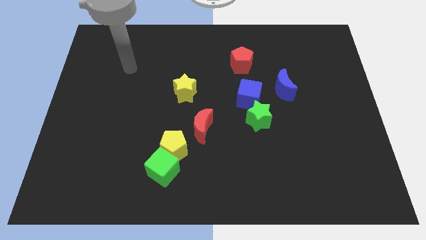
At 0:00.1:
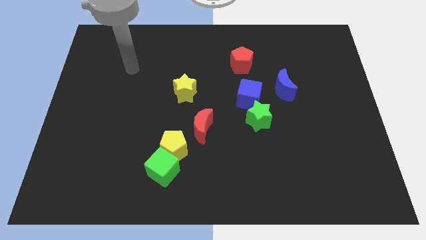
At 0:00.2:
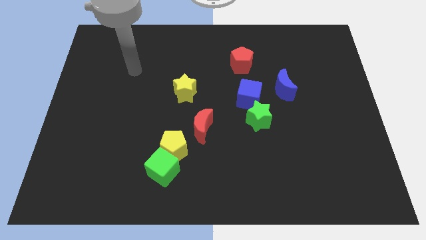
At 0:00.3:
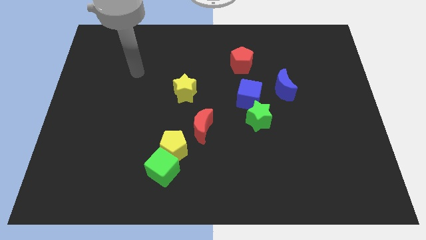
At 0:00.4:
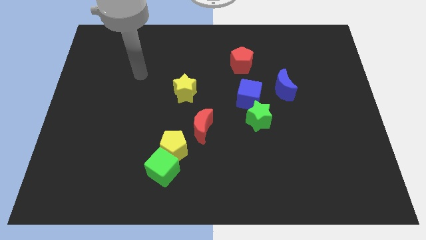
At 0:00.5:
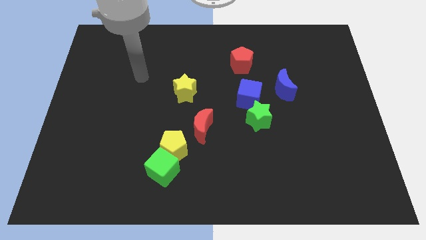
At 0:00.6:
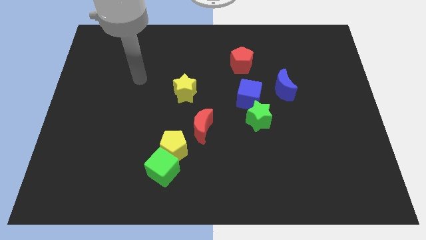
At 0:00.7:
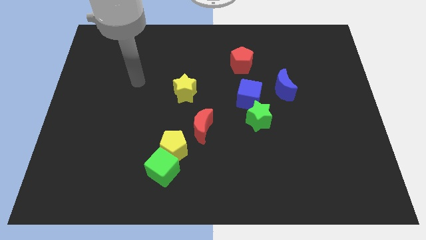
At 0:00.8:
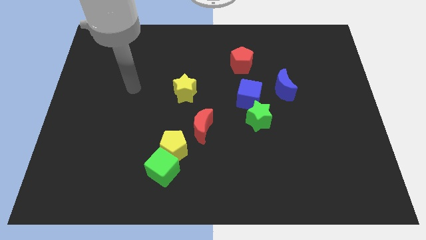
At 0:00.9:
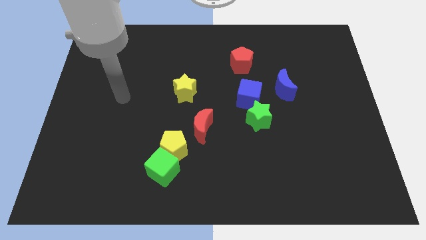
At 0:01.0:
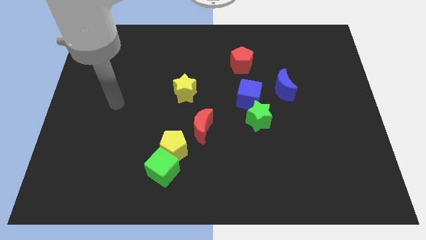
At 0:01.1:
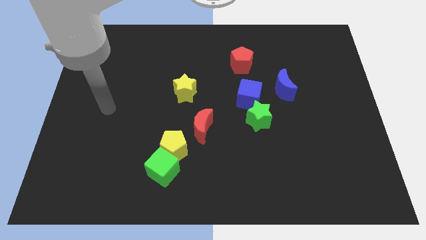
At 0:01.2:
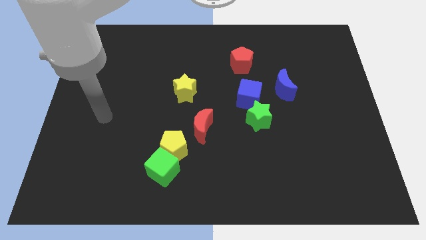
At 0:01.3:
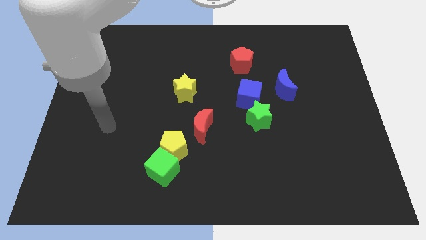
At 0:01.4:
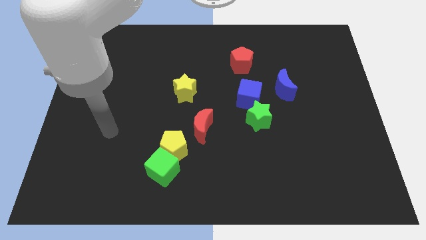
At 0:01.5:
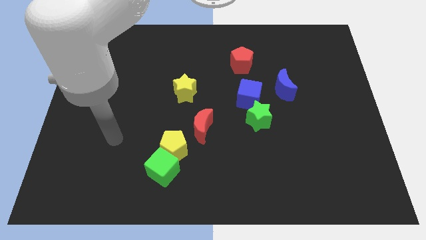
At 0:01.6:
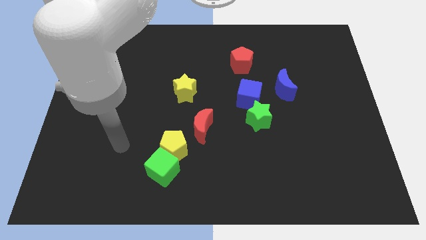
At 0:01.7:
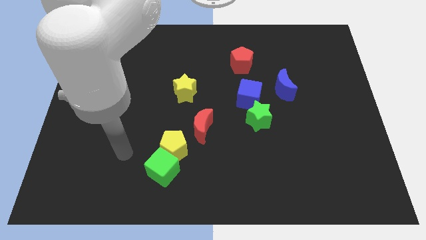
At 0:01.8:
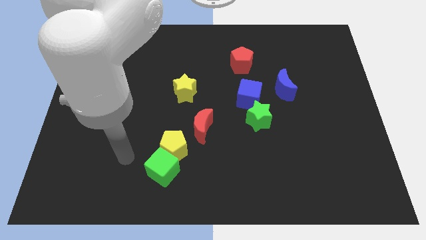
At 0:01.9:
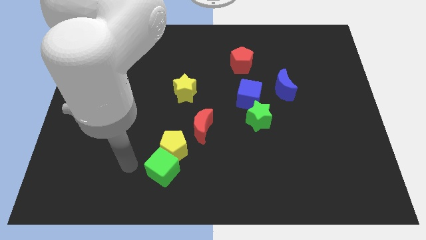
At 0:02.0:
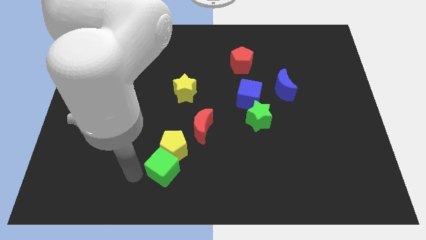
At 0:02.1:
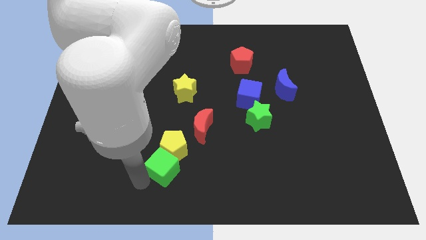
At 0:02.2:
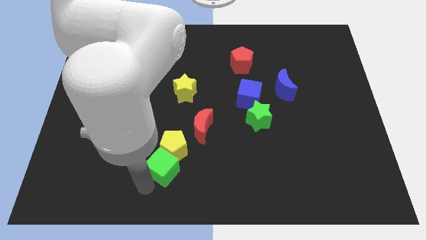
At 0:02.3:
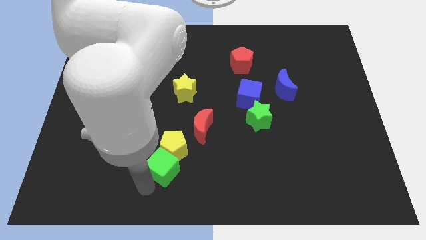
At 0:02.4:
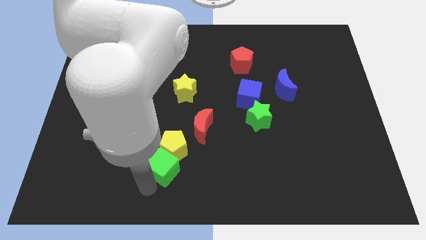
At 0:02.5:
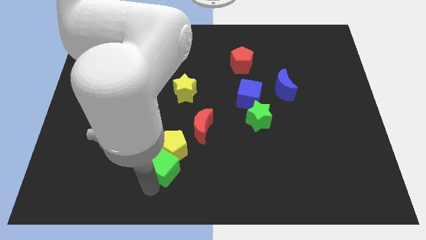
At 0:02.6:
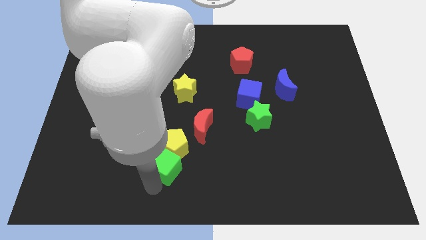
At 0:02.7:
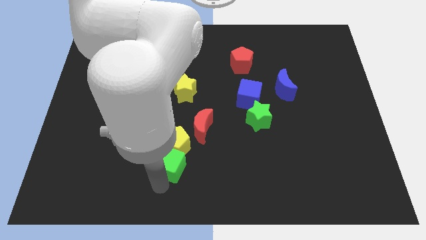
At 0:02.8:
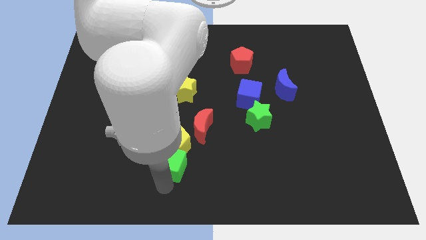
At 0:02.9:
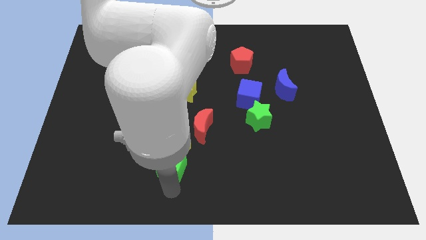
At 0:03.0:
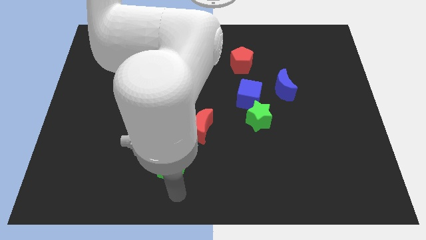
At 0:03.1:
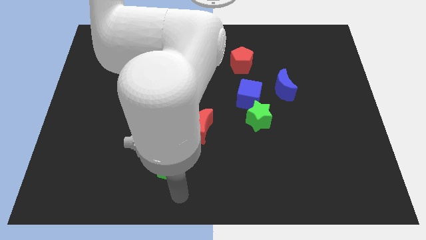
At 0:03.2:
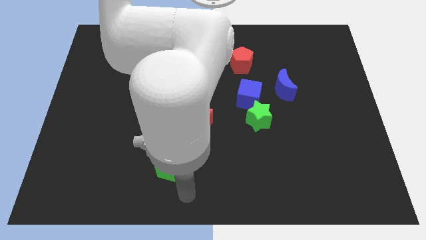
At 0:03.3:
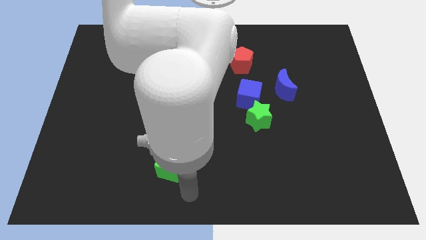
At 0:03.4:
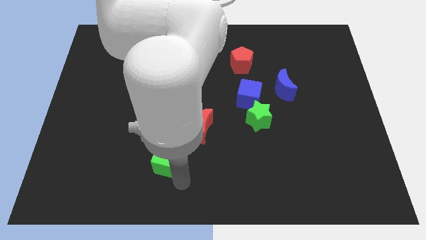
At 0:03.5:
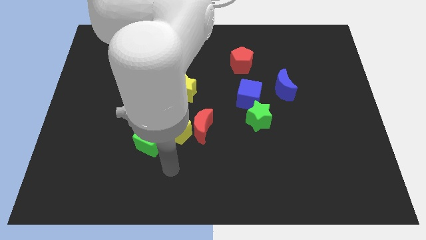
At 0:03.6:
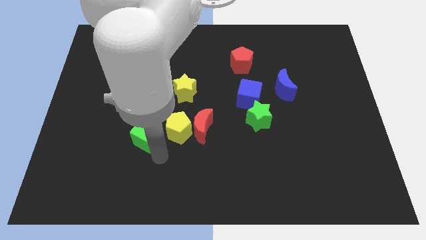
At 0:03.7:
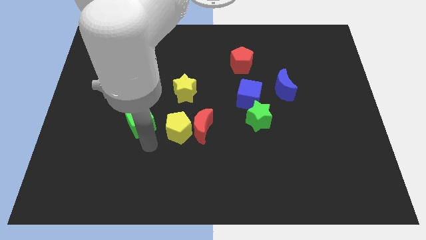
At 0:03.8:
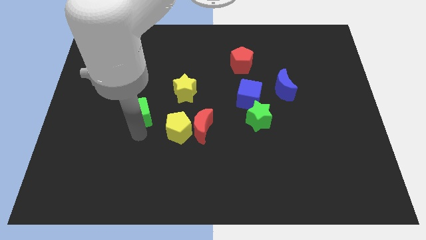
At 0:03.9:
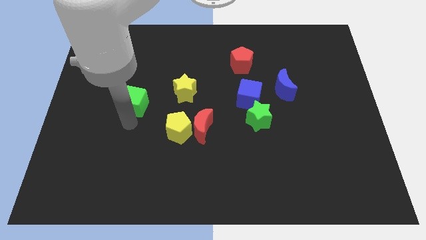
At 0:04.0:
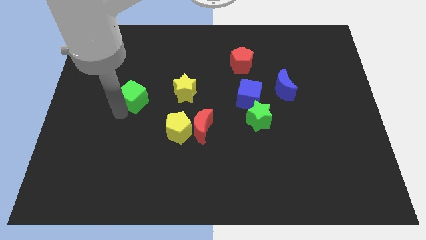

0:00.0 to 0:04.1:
separate green cube from the yellow pentagon

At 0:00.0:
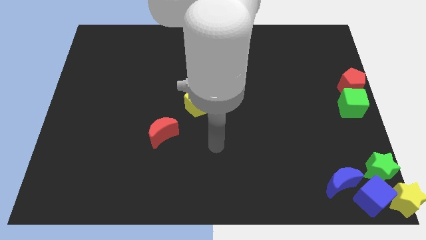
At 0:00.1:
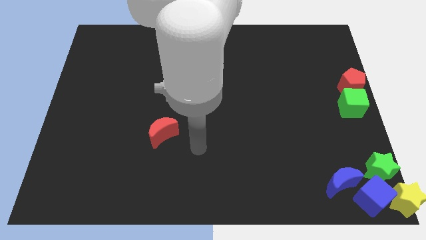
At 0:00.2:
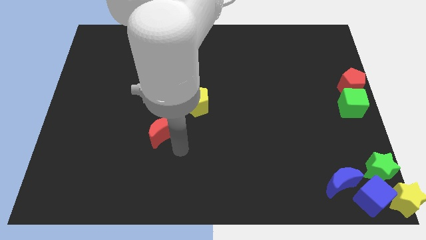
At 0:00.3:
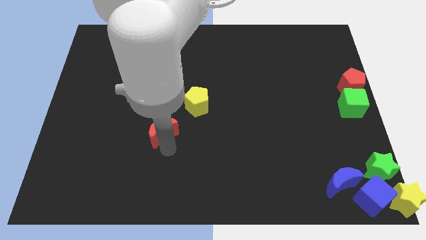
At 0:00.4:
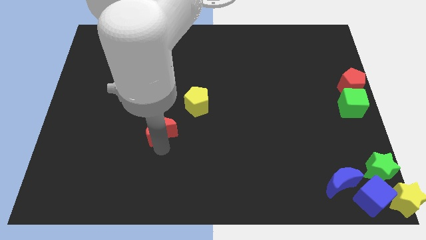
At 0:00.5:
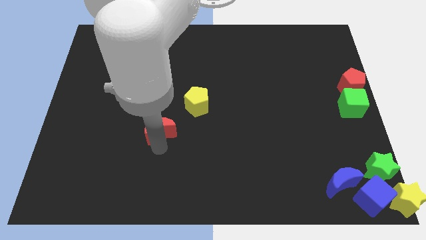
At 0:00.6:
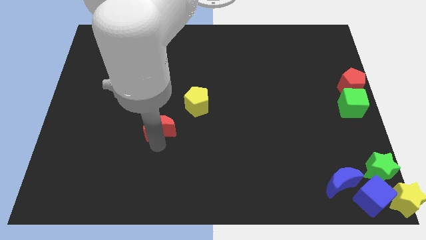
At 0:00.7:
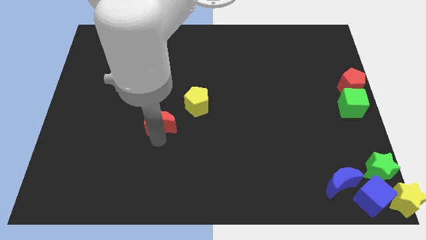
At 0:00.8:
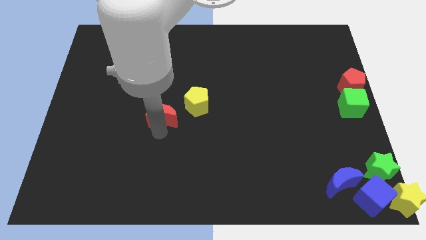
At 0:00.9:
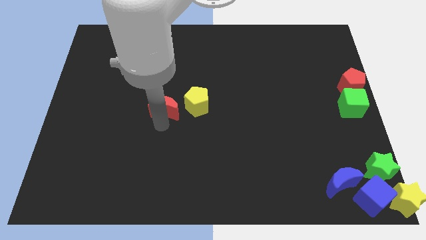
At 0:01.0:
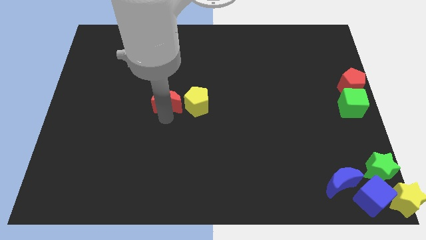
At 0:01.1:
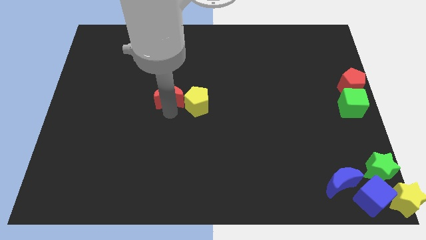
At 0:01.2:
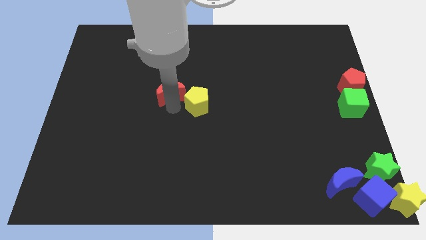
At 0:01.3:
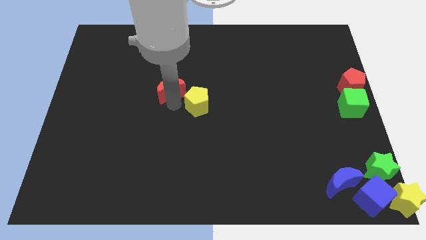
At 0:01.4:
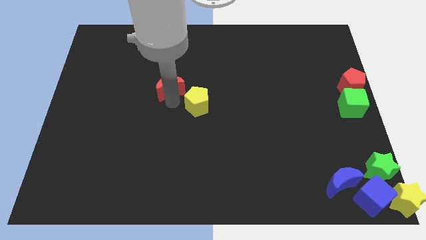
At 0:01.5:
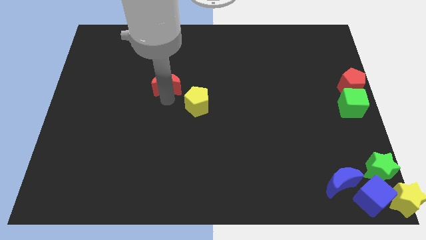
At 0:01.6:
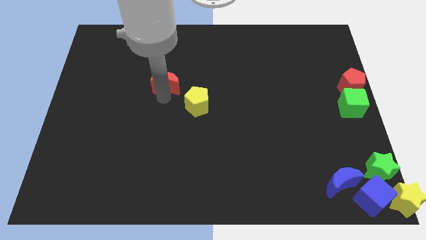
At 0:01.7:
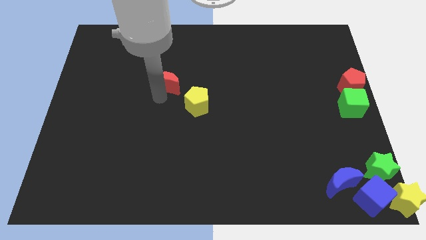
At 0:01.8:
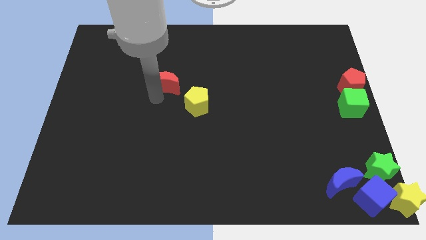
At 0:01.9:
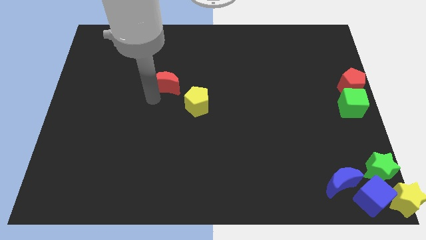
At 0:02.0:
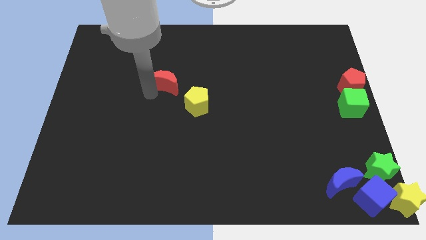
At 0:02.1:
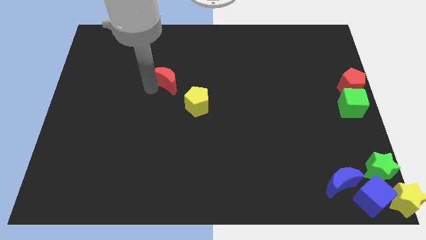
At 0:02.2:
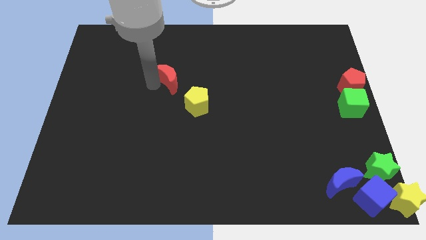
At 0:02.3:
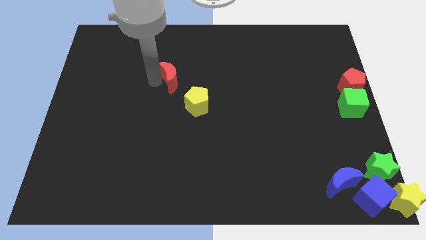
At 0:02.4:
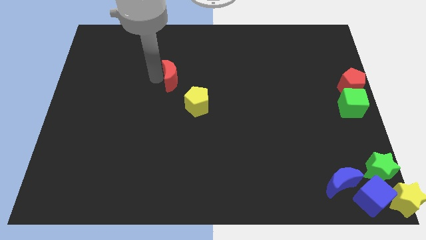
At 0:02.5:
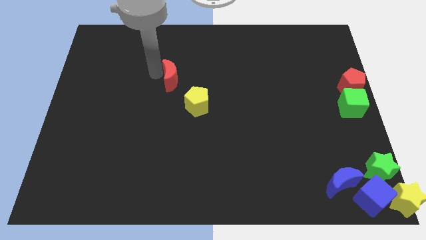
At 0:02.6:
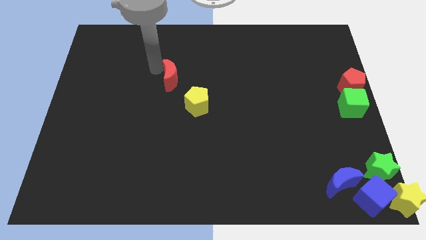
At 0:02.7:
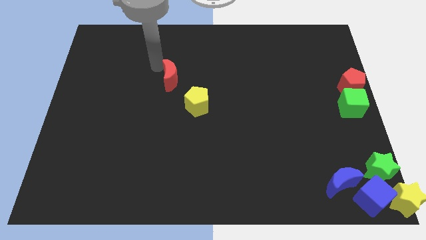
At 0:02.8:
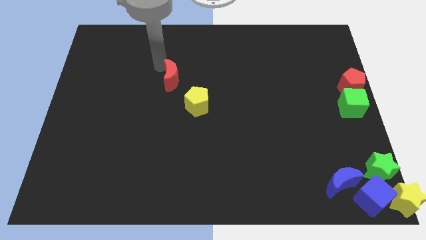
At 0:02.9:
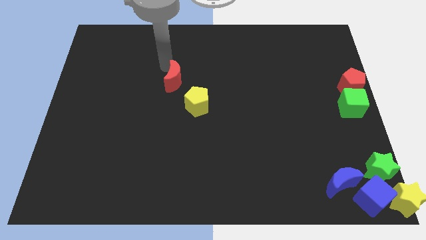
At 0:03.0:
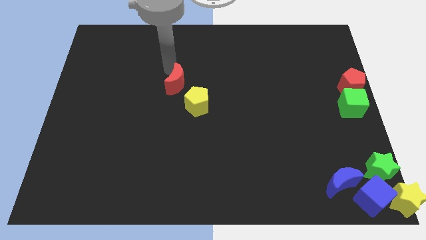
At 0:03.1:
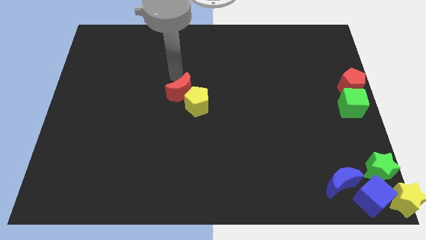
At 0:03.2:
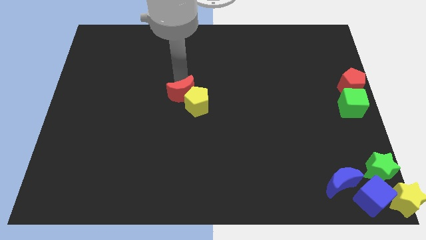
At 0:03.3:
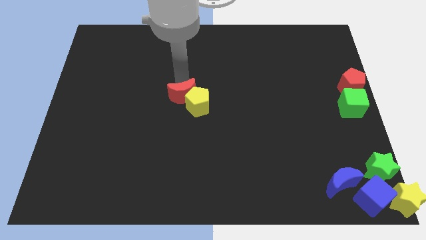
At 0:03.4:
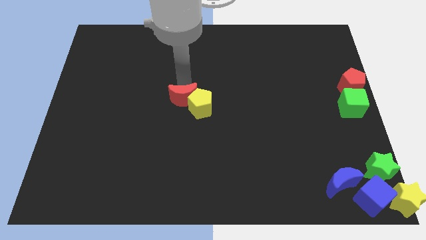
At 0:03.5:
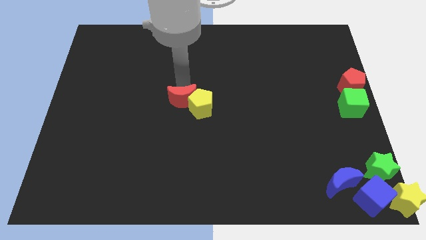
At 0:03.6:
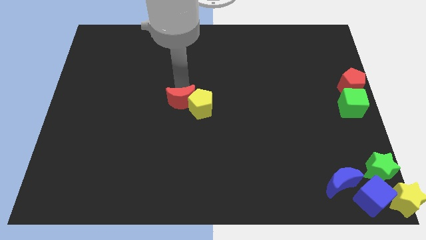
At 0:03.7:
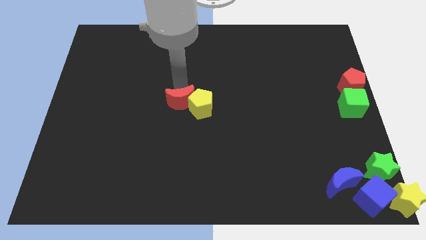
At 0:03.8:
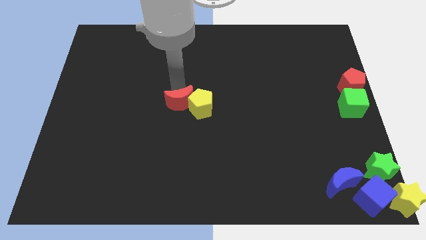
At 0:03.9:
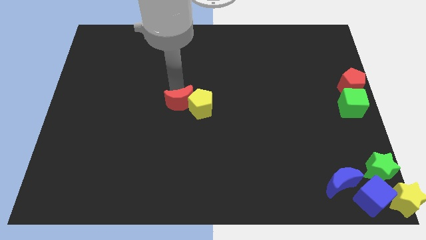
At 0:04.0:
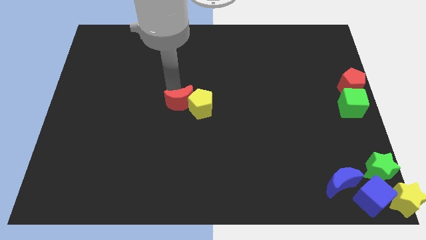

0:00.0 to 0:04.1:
push red crescent into the yellow pentagon

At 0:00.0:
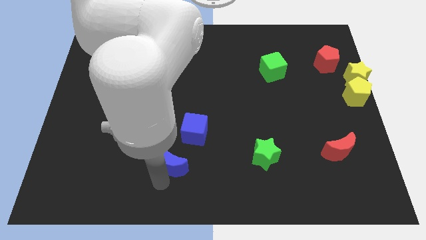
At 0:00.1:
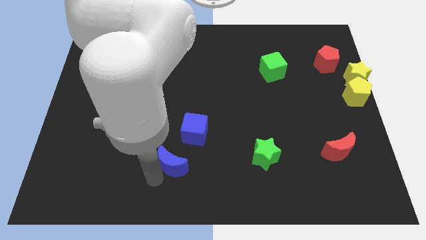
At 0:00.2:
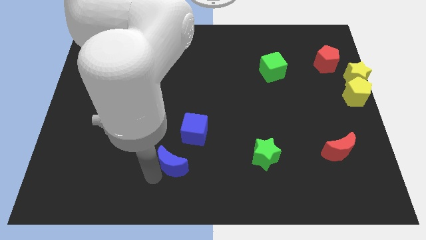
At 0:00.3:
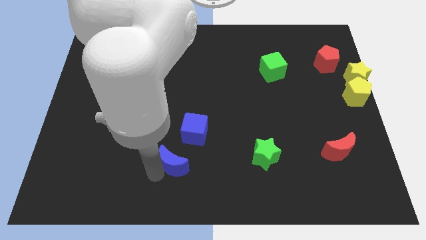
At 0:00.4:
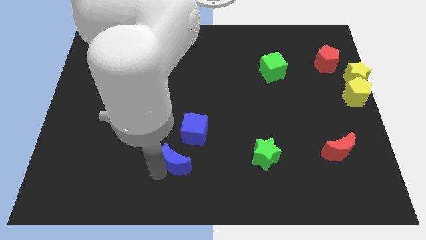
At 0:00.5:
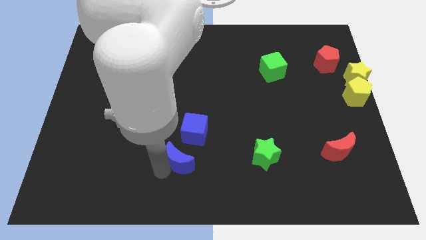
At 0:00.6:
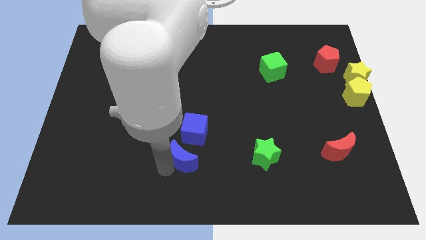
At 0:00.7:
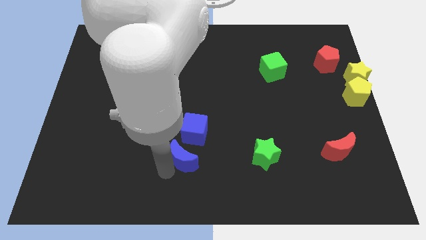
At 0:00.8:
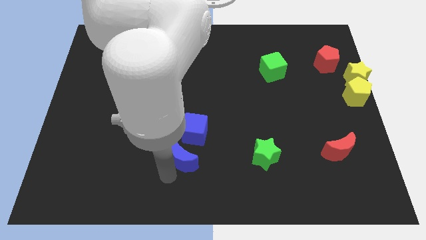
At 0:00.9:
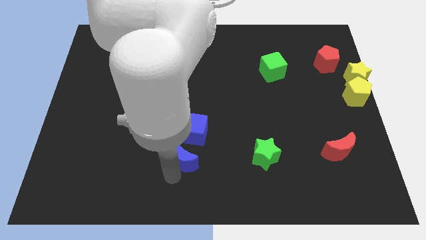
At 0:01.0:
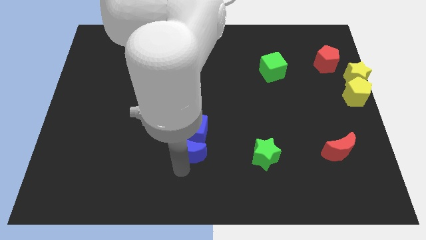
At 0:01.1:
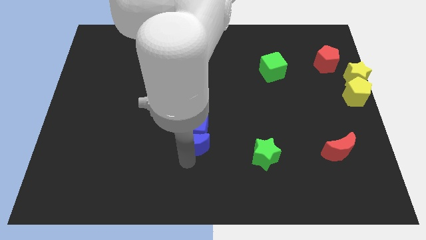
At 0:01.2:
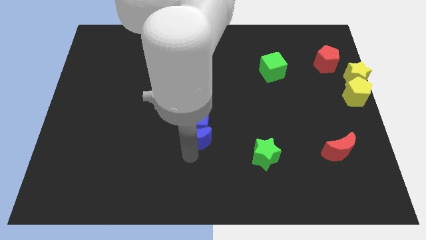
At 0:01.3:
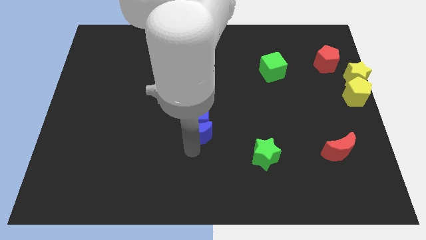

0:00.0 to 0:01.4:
move the blue crescent below the blue cube
